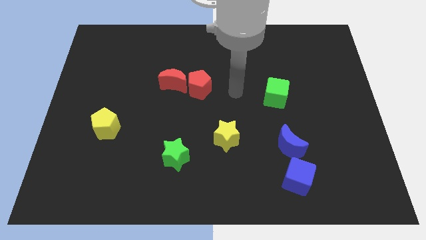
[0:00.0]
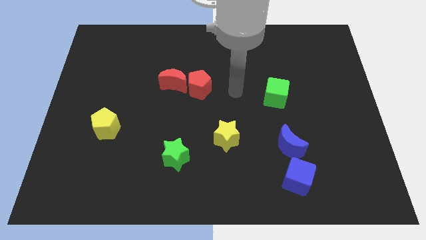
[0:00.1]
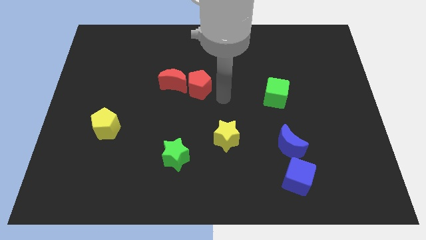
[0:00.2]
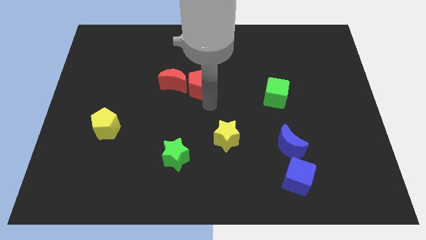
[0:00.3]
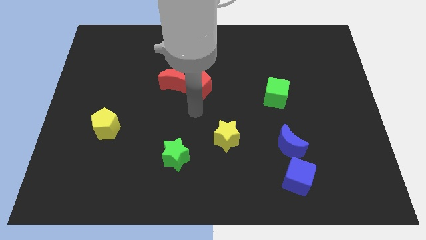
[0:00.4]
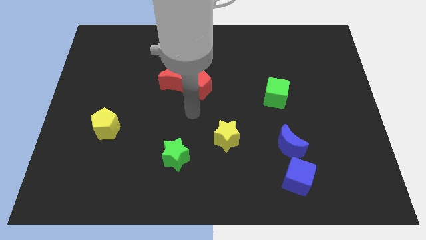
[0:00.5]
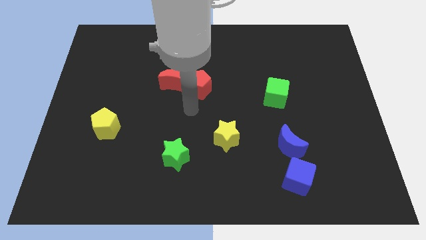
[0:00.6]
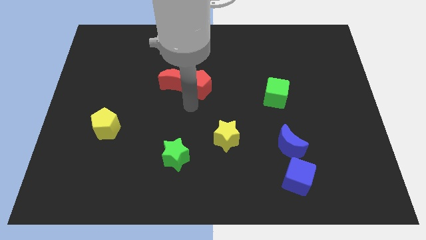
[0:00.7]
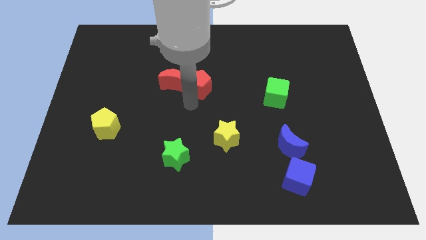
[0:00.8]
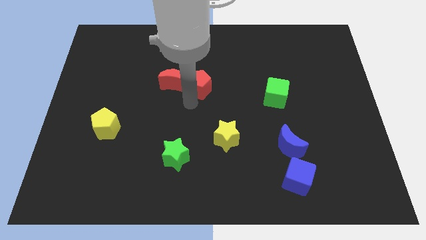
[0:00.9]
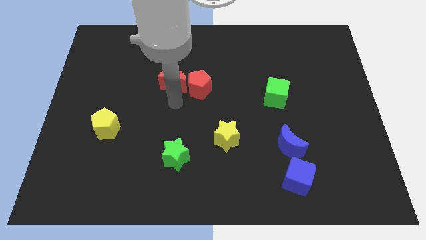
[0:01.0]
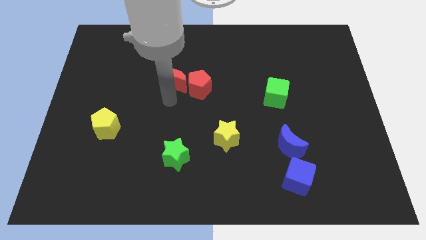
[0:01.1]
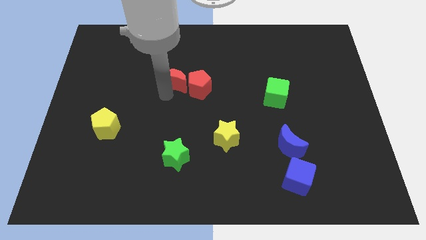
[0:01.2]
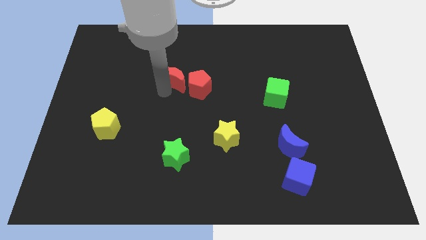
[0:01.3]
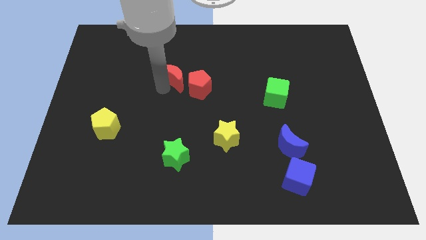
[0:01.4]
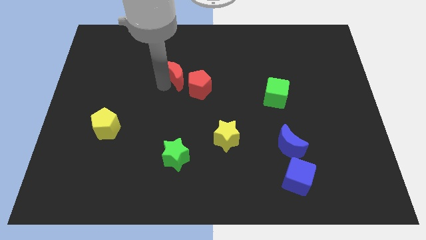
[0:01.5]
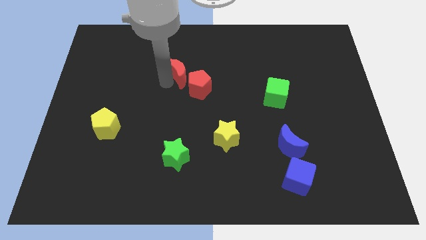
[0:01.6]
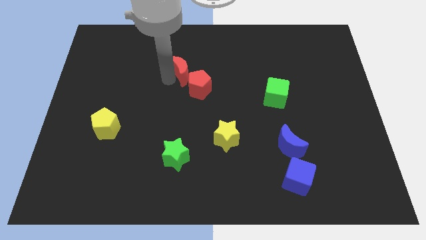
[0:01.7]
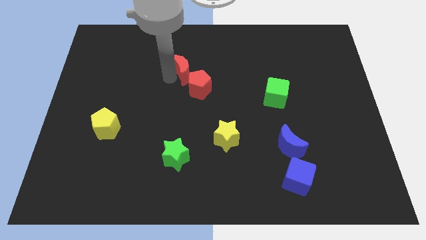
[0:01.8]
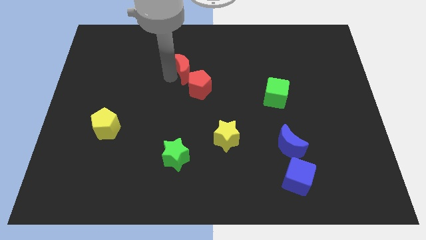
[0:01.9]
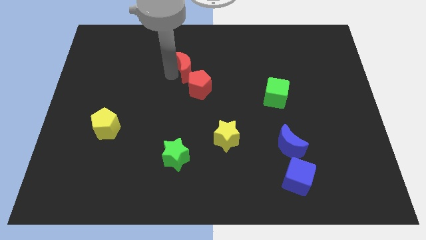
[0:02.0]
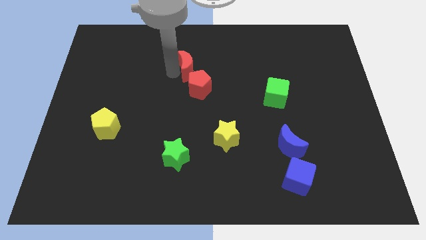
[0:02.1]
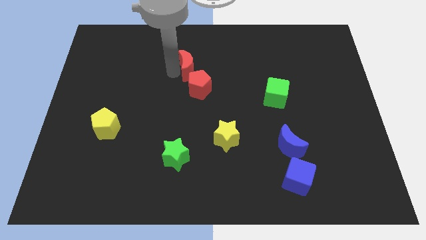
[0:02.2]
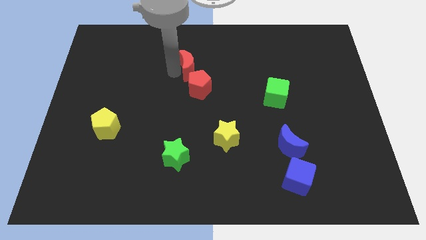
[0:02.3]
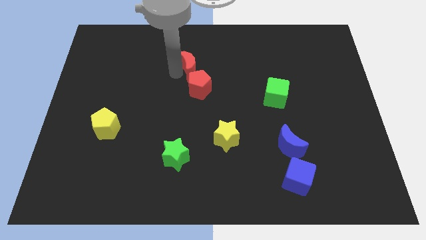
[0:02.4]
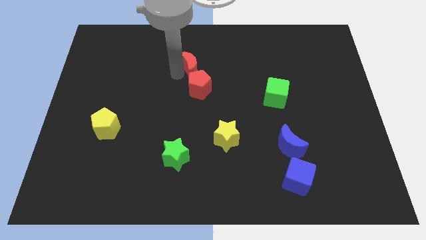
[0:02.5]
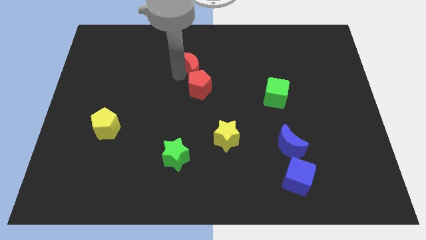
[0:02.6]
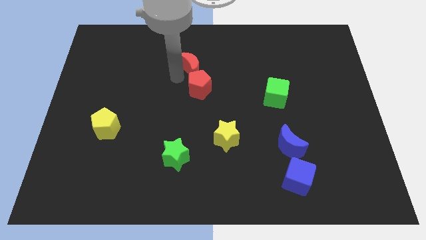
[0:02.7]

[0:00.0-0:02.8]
place red crescent above the red pentagon

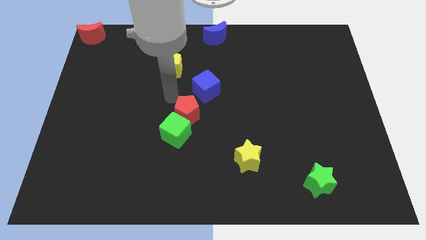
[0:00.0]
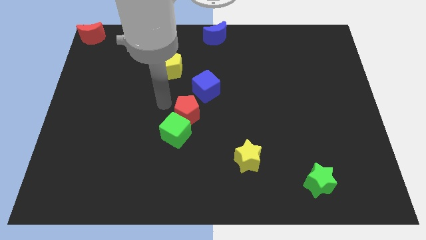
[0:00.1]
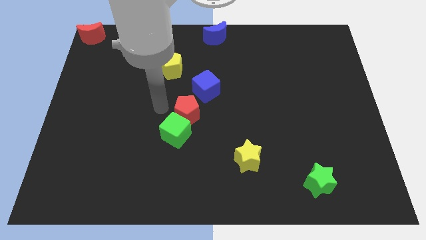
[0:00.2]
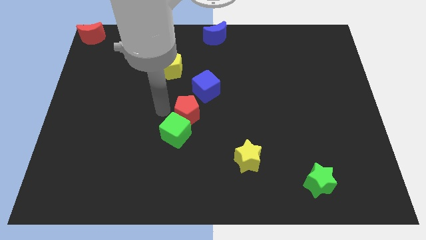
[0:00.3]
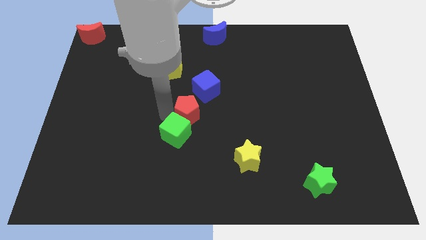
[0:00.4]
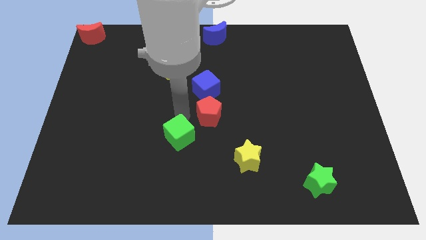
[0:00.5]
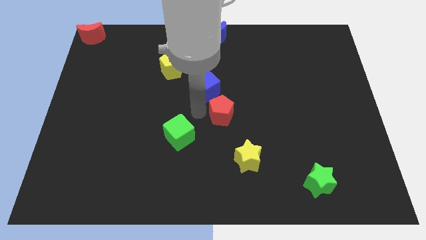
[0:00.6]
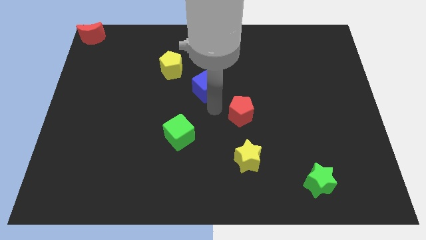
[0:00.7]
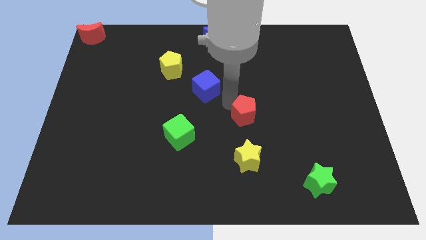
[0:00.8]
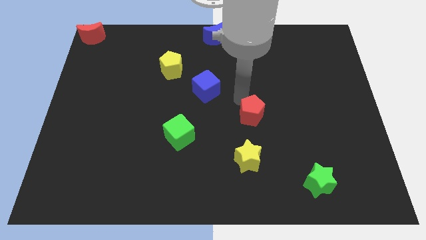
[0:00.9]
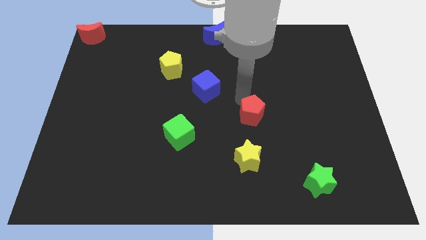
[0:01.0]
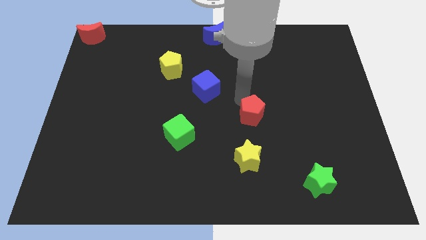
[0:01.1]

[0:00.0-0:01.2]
separate the red pentagon from the green cube

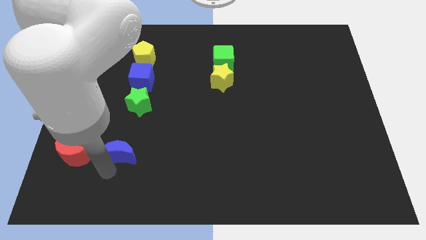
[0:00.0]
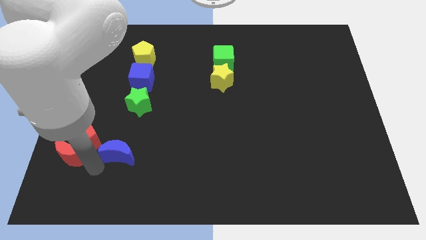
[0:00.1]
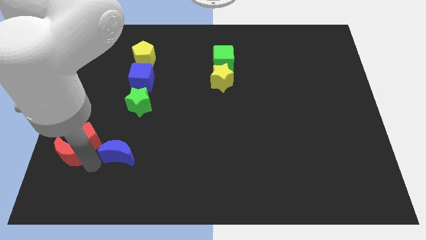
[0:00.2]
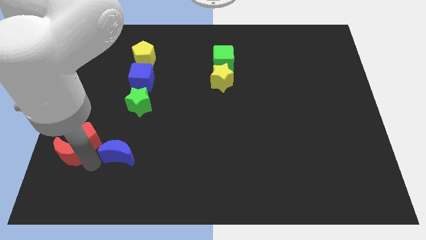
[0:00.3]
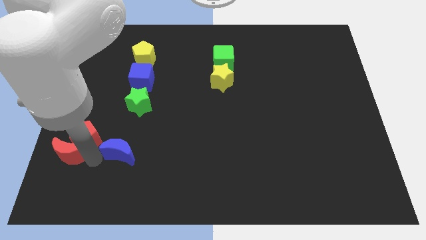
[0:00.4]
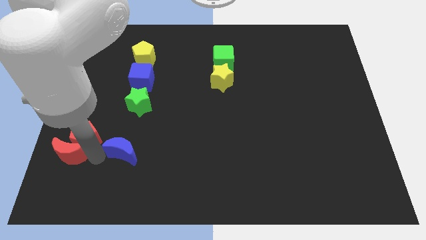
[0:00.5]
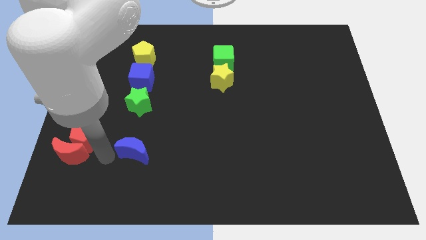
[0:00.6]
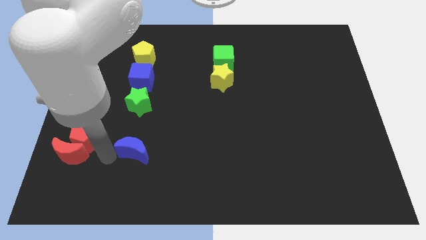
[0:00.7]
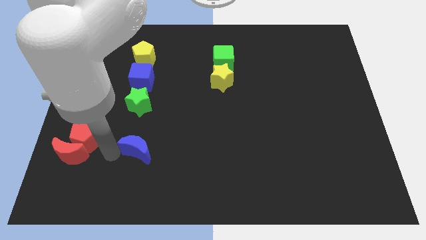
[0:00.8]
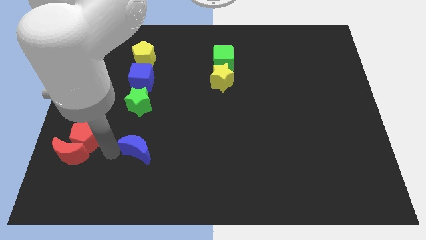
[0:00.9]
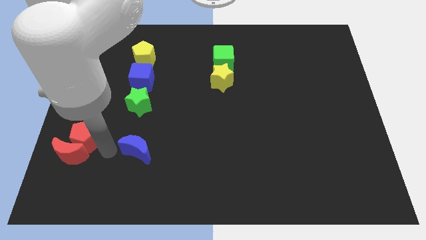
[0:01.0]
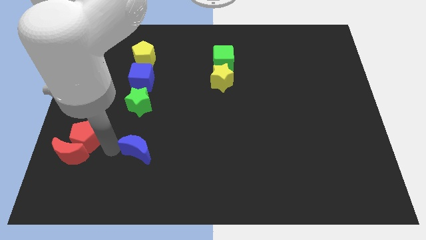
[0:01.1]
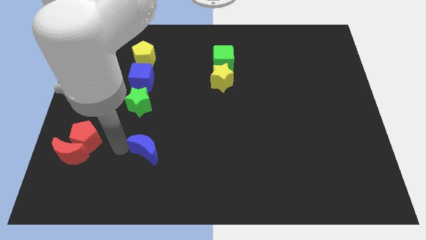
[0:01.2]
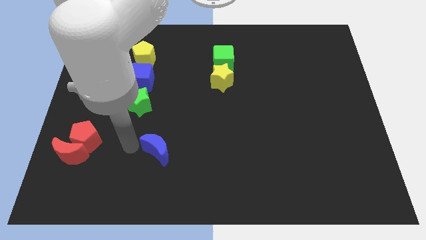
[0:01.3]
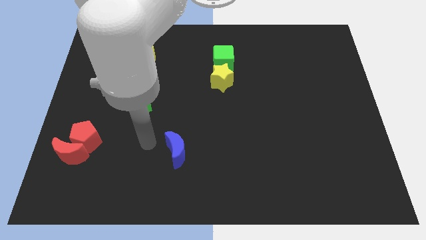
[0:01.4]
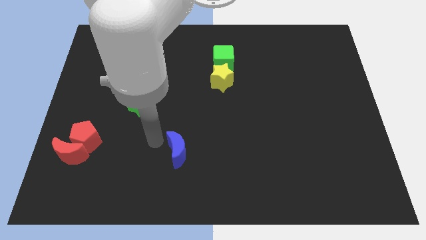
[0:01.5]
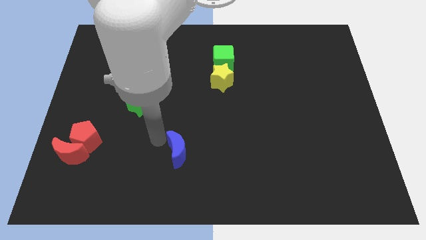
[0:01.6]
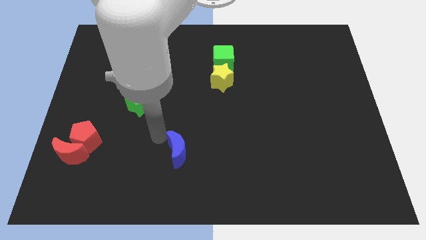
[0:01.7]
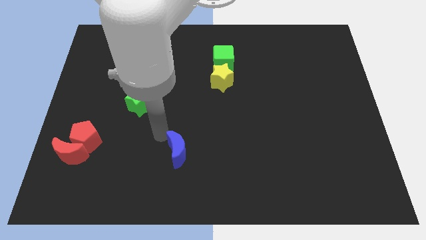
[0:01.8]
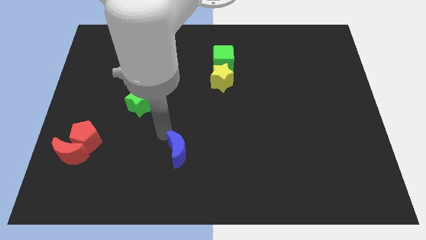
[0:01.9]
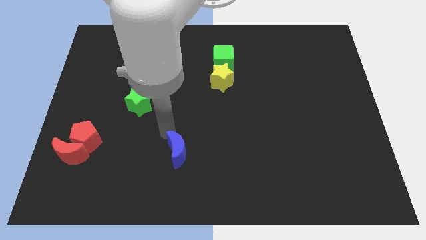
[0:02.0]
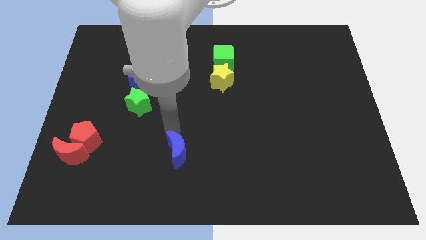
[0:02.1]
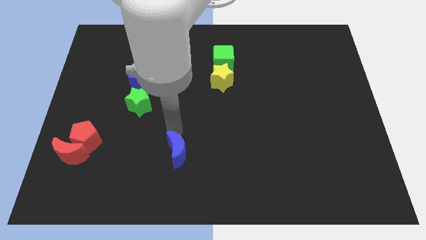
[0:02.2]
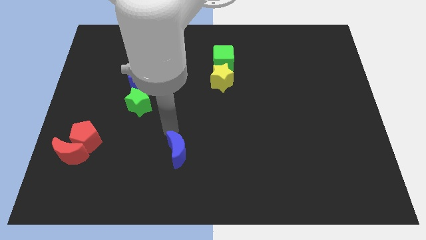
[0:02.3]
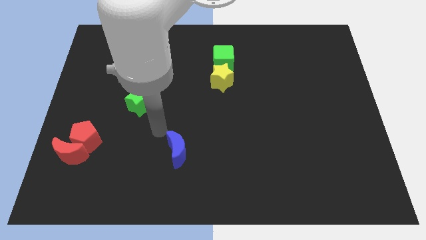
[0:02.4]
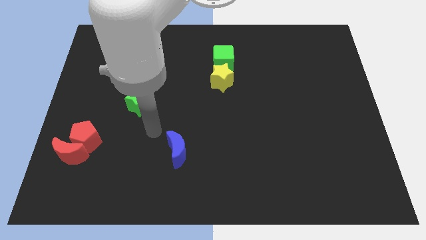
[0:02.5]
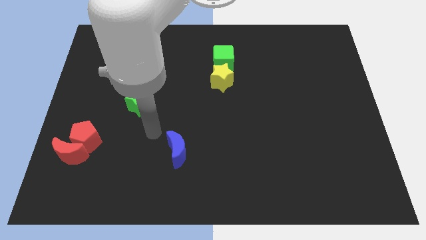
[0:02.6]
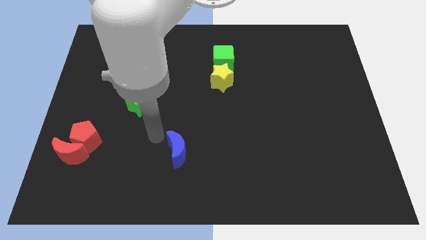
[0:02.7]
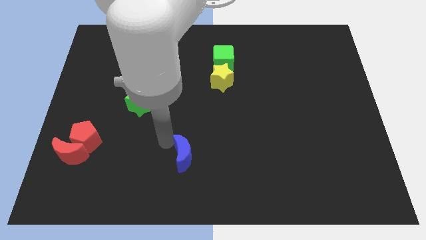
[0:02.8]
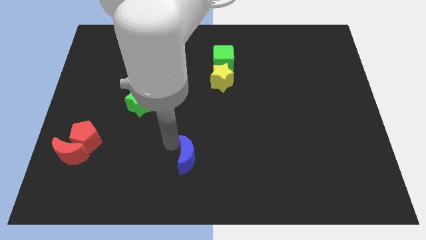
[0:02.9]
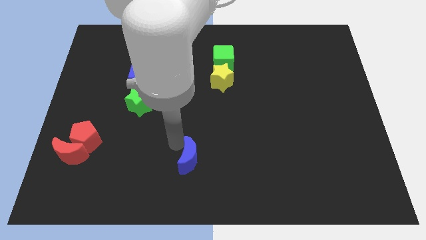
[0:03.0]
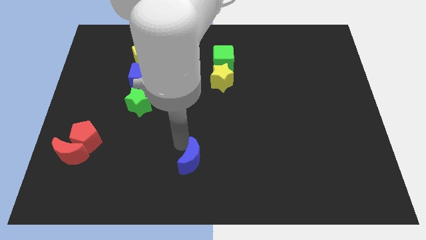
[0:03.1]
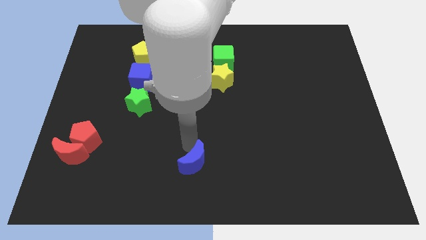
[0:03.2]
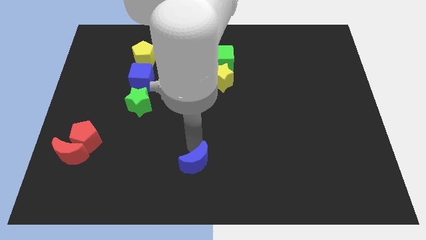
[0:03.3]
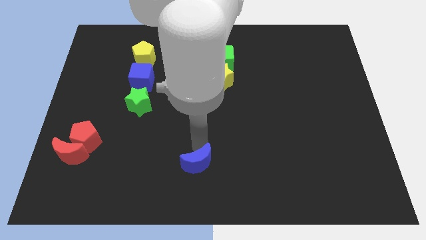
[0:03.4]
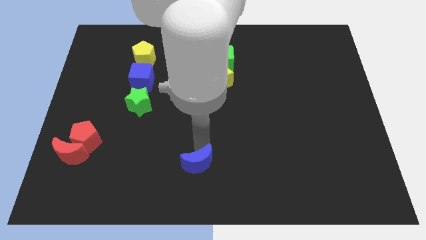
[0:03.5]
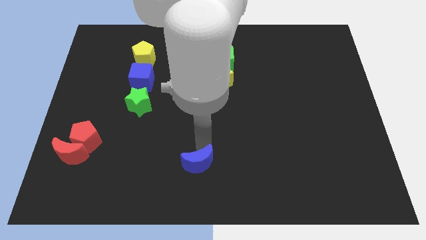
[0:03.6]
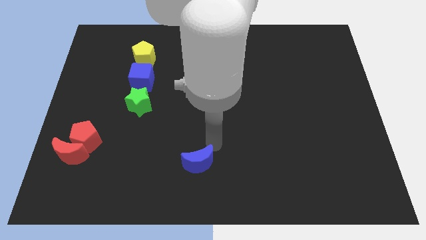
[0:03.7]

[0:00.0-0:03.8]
move the blue moon diagonally to the green star

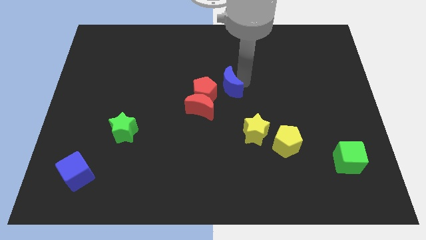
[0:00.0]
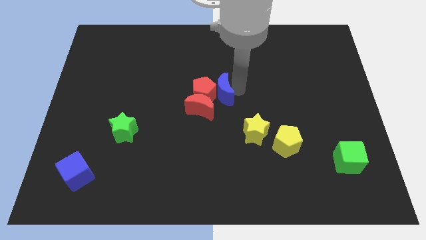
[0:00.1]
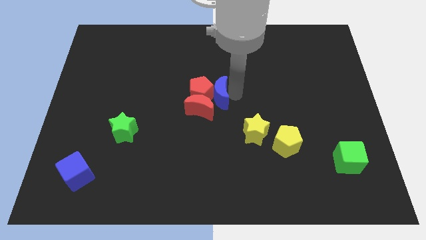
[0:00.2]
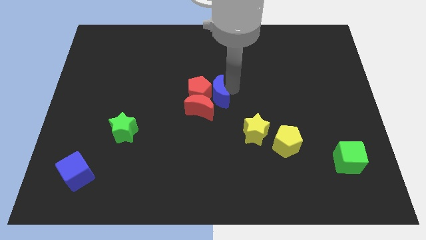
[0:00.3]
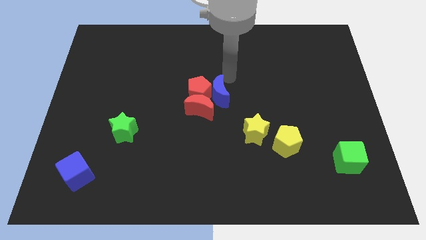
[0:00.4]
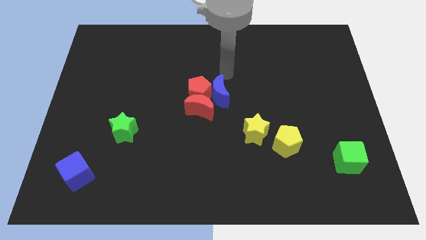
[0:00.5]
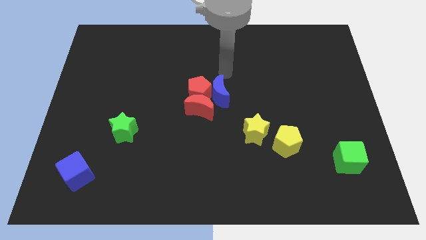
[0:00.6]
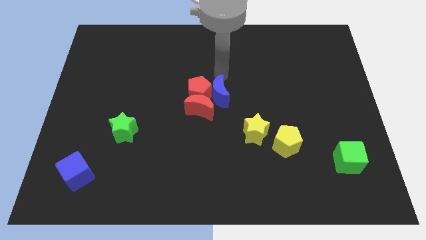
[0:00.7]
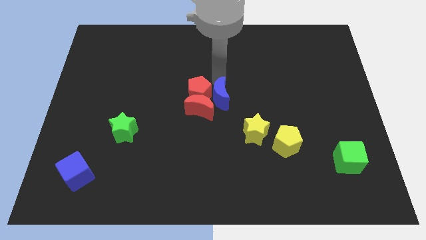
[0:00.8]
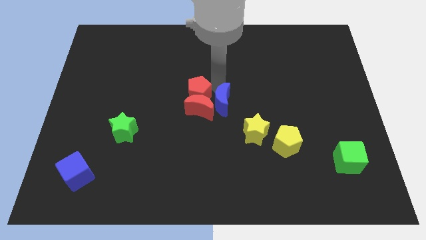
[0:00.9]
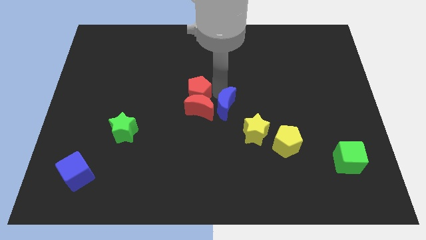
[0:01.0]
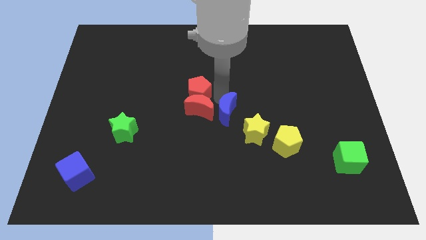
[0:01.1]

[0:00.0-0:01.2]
move the blue crescent to the center of the board
